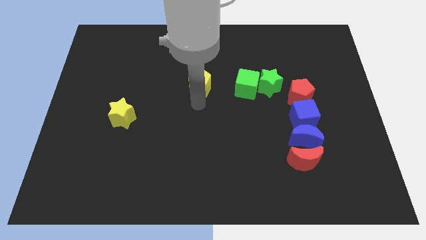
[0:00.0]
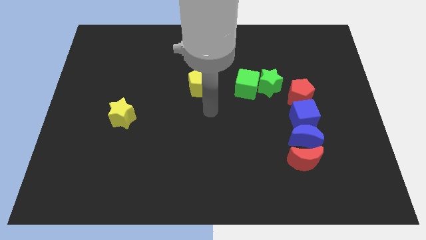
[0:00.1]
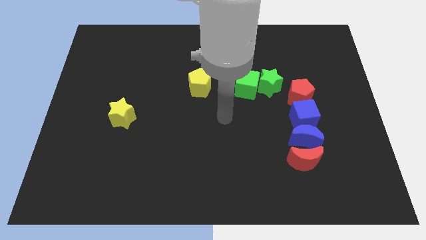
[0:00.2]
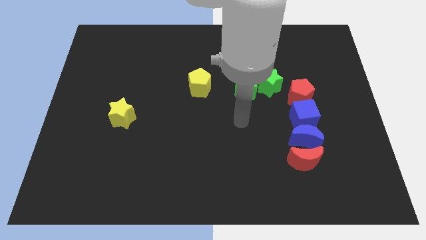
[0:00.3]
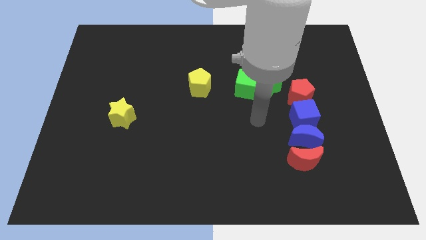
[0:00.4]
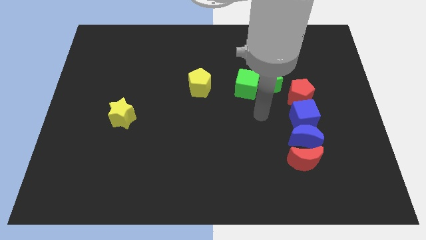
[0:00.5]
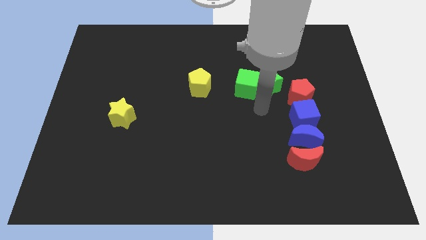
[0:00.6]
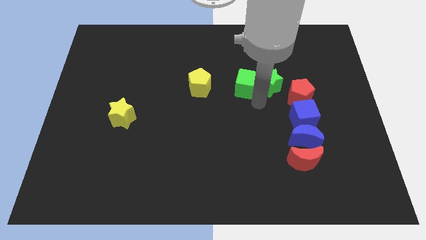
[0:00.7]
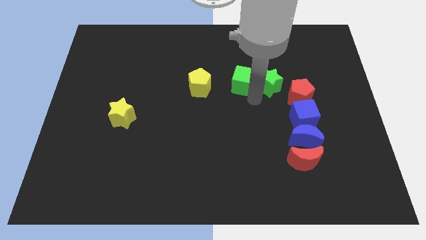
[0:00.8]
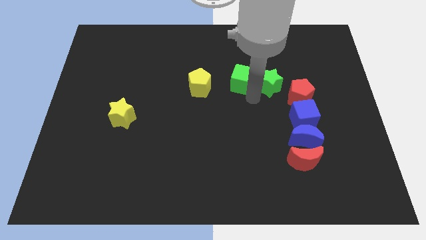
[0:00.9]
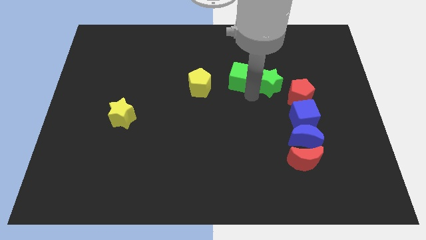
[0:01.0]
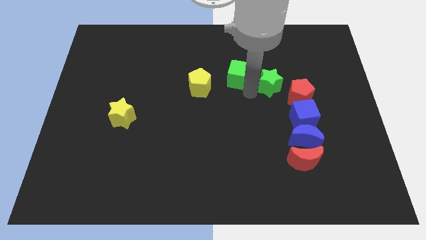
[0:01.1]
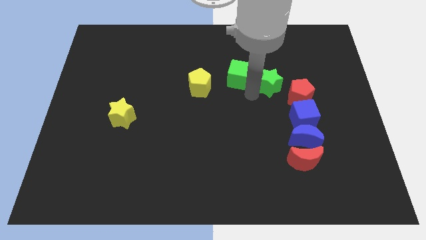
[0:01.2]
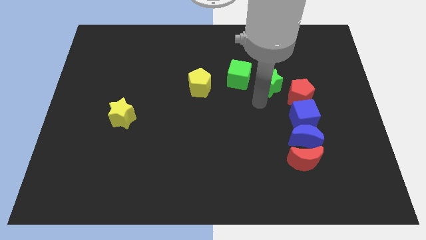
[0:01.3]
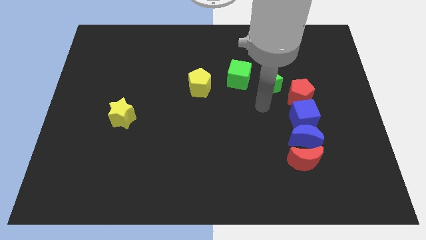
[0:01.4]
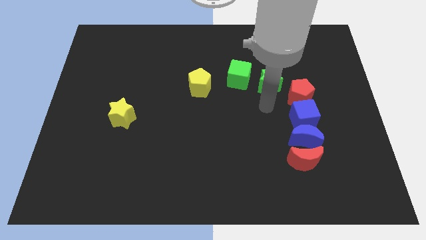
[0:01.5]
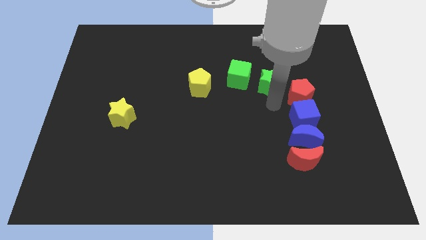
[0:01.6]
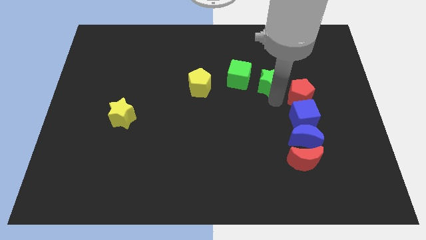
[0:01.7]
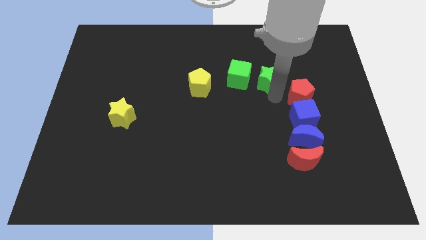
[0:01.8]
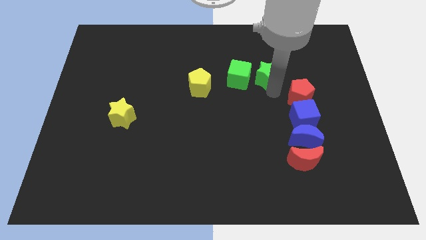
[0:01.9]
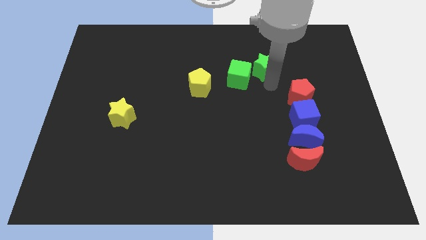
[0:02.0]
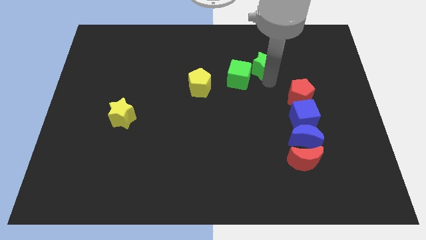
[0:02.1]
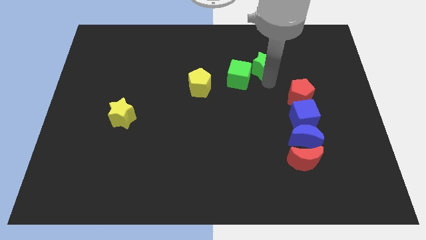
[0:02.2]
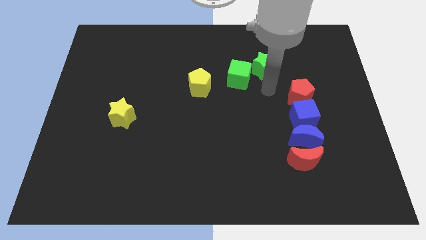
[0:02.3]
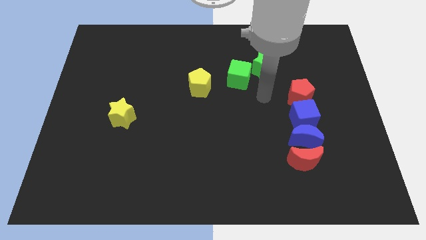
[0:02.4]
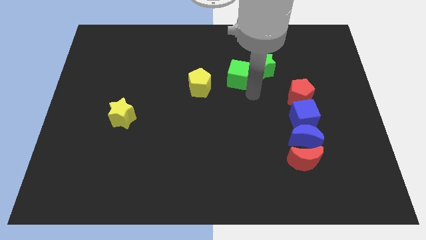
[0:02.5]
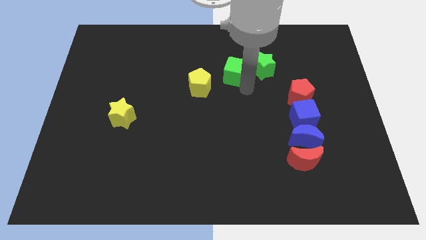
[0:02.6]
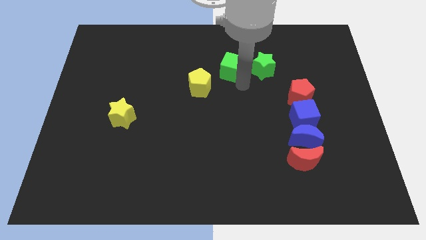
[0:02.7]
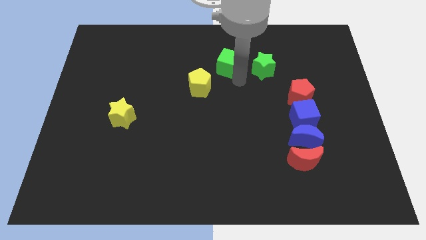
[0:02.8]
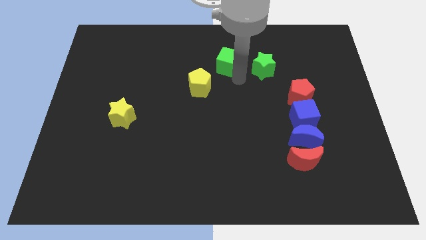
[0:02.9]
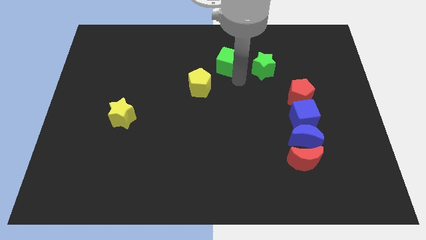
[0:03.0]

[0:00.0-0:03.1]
separate the green cube and green star

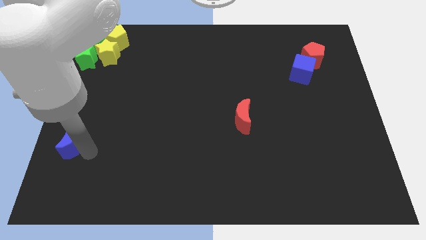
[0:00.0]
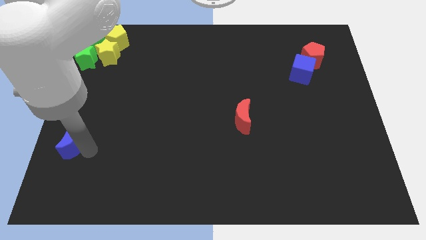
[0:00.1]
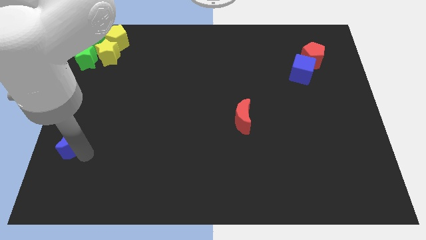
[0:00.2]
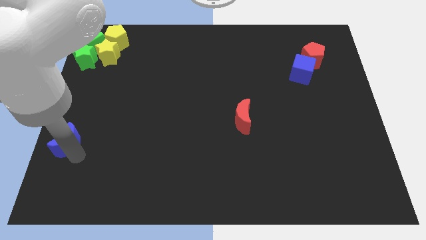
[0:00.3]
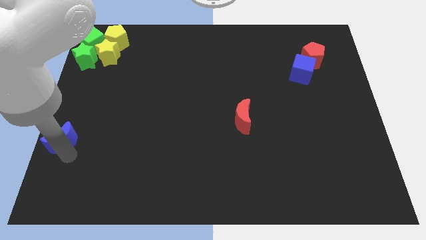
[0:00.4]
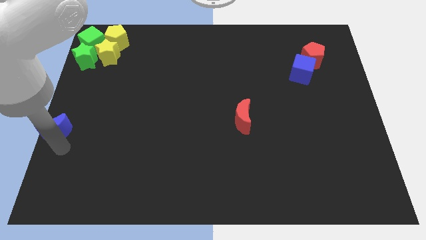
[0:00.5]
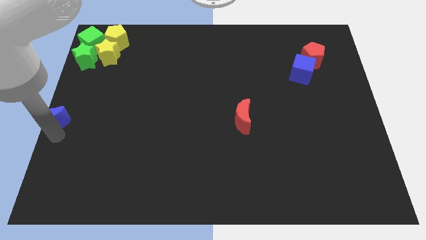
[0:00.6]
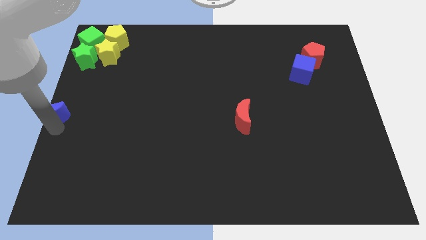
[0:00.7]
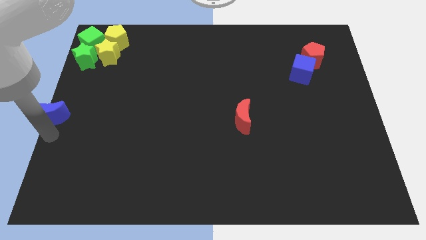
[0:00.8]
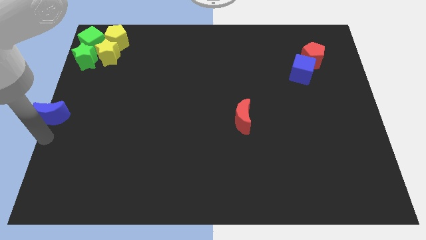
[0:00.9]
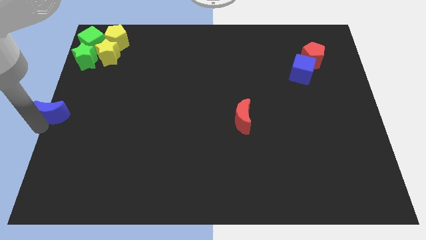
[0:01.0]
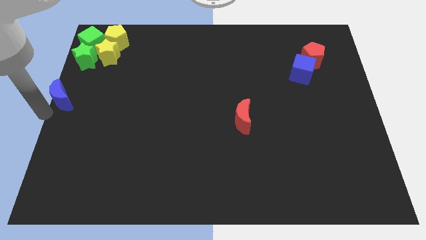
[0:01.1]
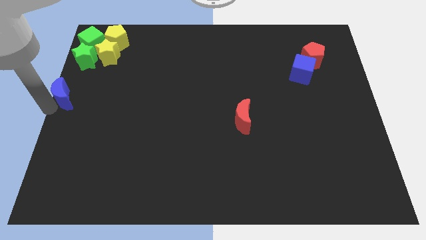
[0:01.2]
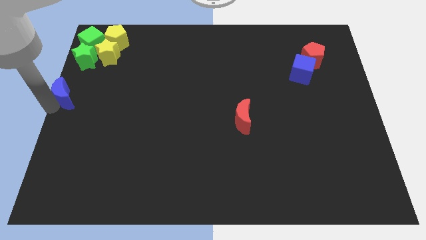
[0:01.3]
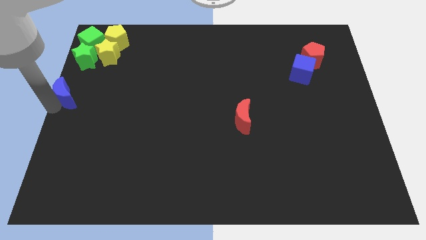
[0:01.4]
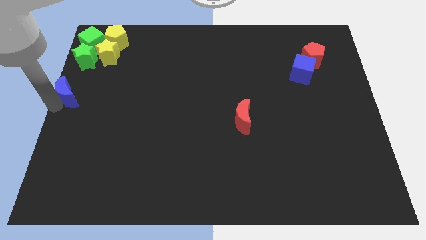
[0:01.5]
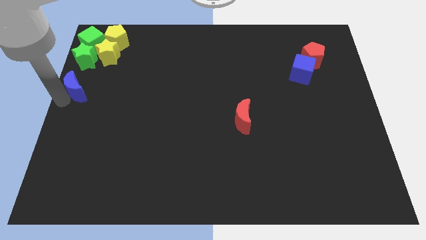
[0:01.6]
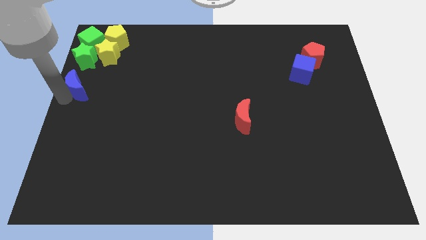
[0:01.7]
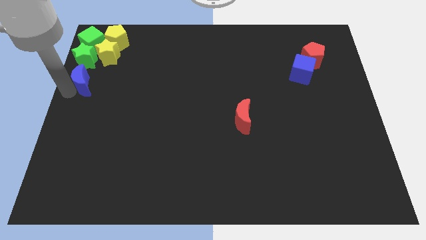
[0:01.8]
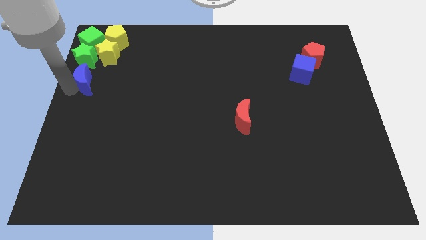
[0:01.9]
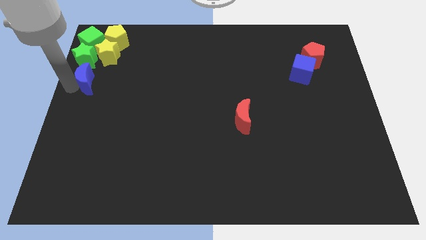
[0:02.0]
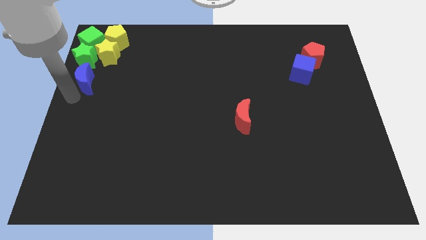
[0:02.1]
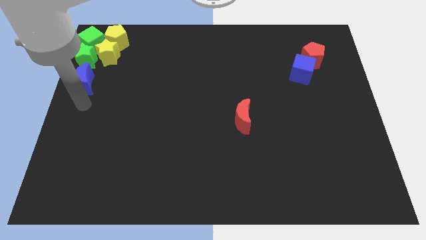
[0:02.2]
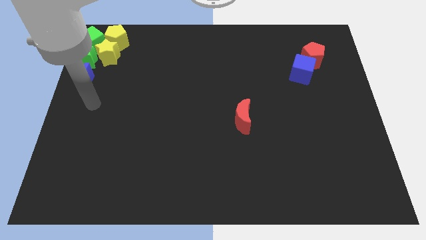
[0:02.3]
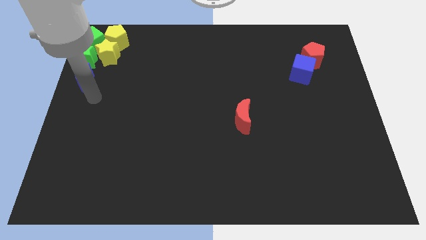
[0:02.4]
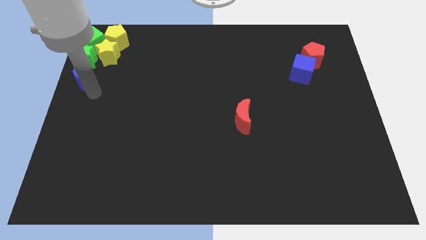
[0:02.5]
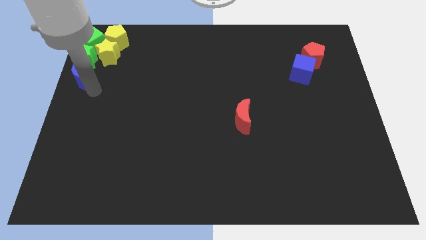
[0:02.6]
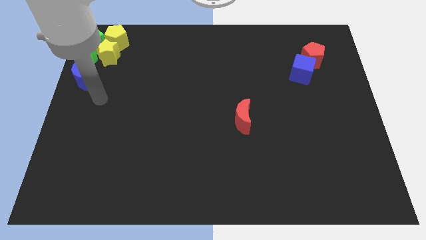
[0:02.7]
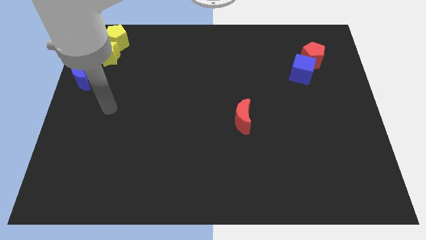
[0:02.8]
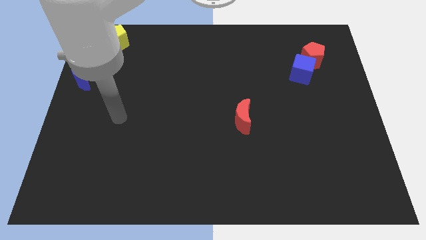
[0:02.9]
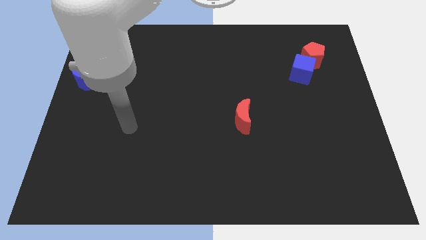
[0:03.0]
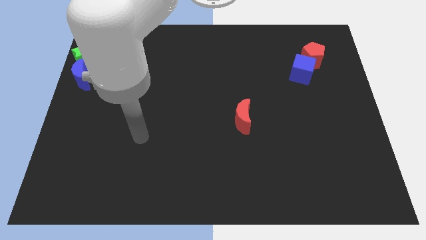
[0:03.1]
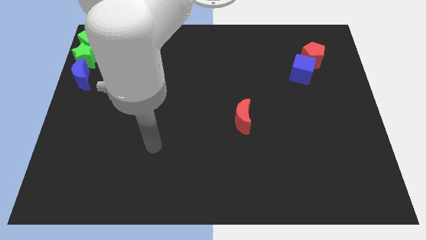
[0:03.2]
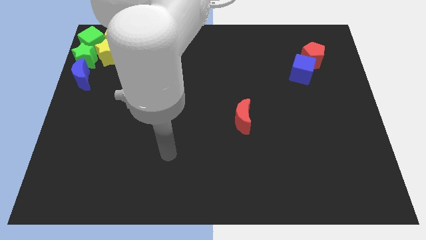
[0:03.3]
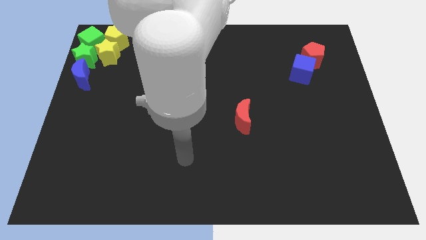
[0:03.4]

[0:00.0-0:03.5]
place the blue moon below the green star

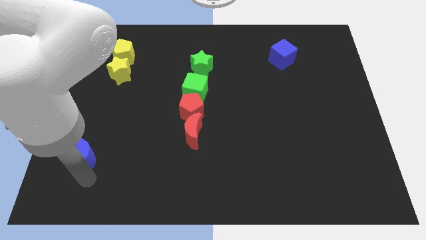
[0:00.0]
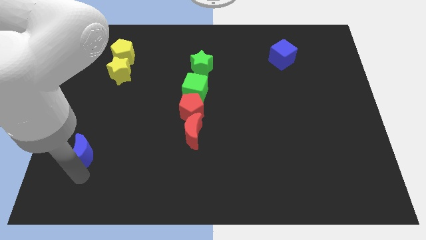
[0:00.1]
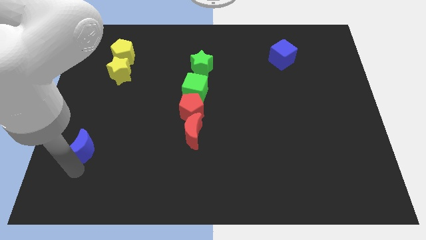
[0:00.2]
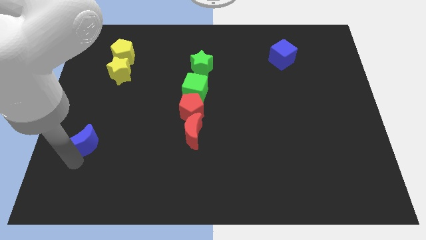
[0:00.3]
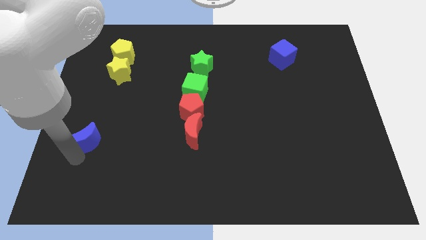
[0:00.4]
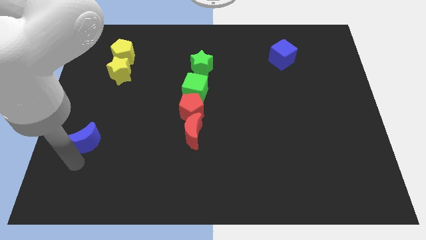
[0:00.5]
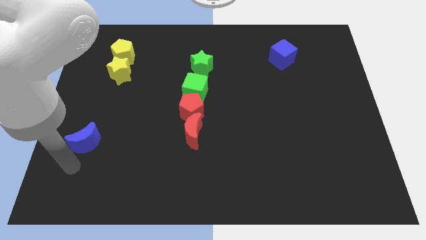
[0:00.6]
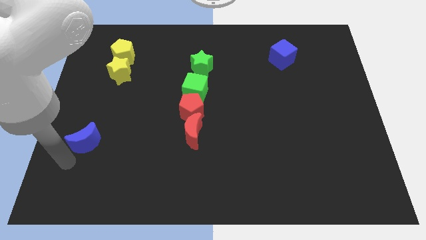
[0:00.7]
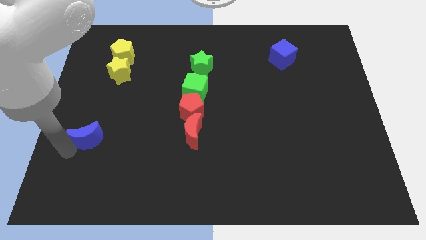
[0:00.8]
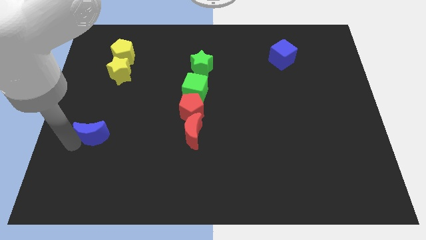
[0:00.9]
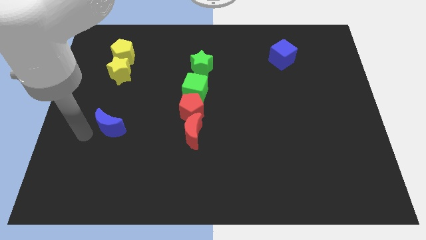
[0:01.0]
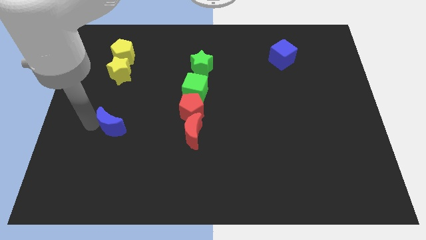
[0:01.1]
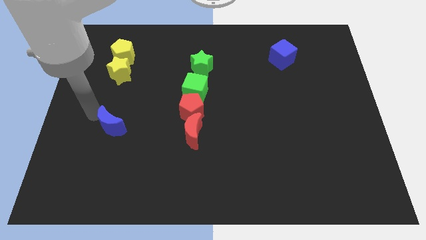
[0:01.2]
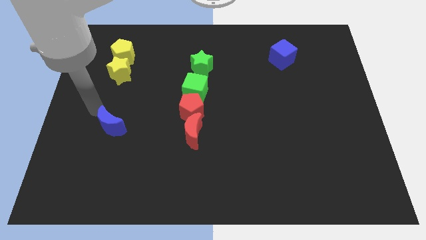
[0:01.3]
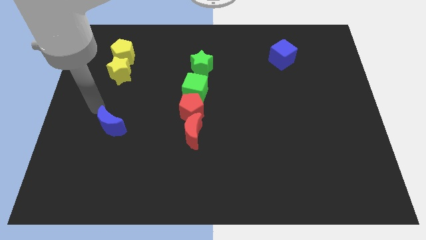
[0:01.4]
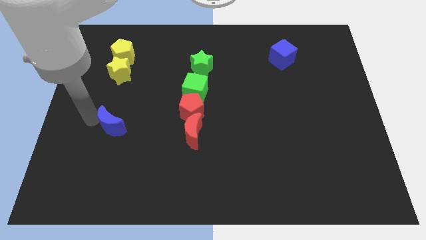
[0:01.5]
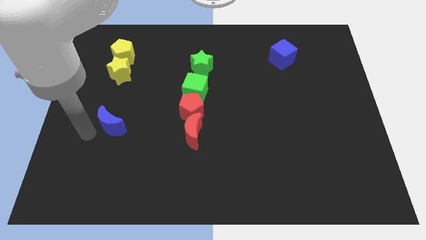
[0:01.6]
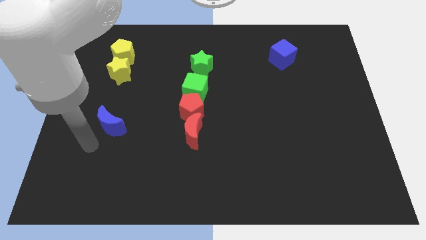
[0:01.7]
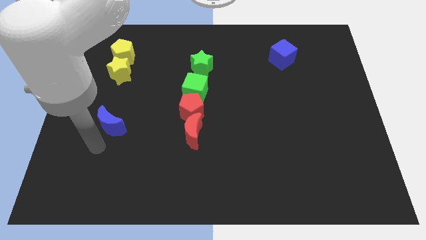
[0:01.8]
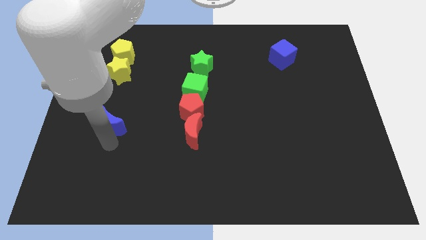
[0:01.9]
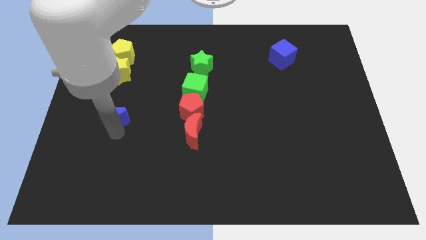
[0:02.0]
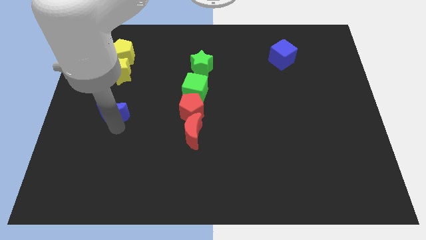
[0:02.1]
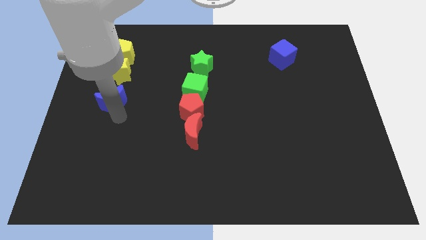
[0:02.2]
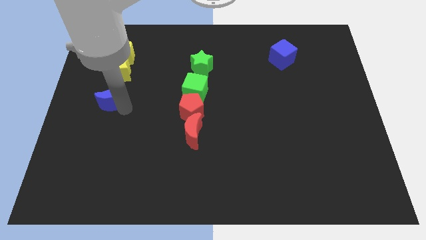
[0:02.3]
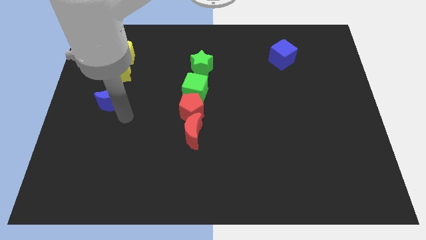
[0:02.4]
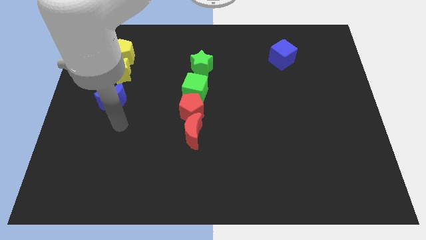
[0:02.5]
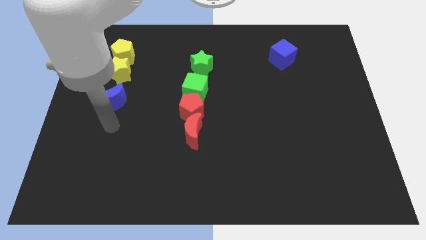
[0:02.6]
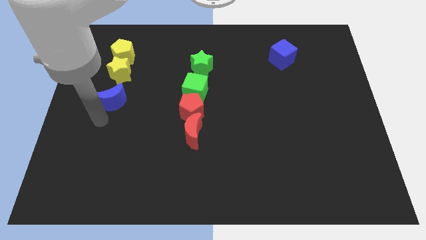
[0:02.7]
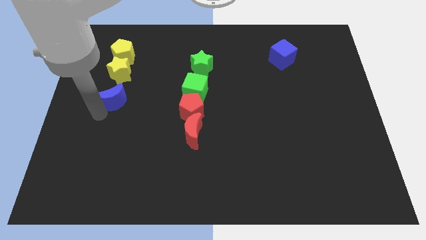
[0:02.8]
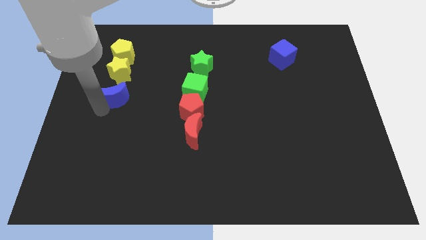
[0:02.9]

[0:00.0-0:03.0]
drag the blue moon and place it below the yellow star
